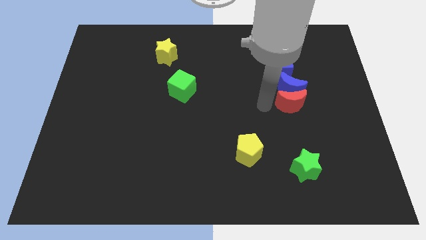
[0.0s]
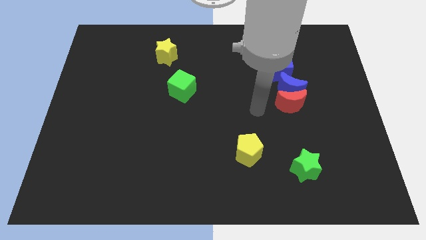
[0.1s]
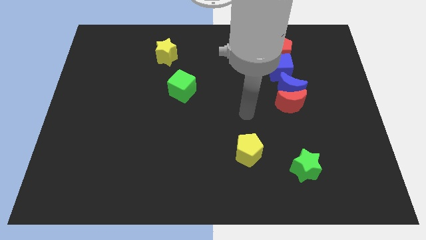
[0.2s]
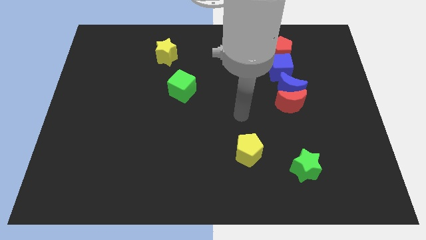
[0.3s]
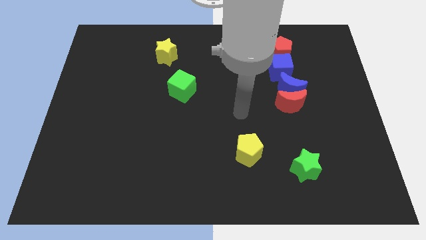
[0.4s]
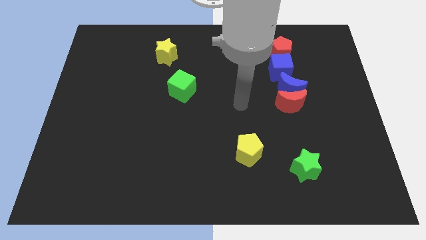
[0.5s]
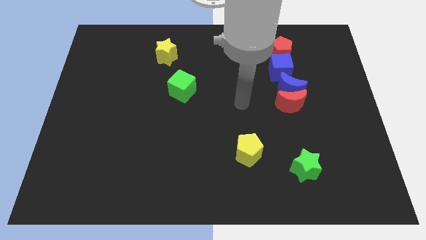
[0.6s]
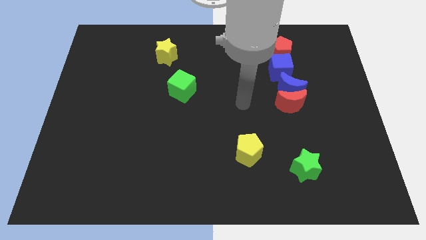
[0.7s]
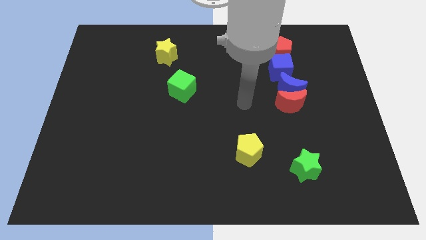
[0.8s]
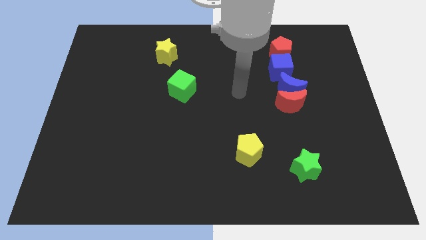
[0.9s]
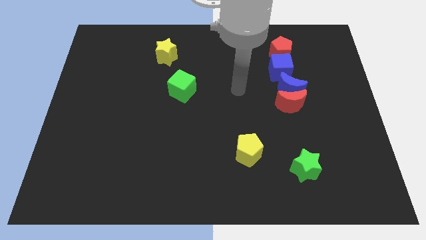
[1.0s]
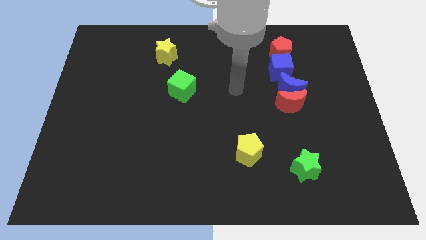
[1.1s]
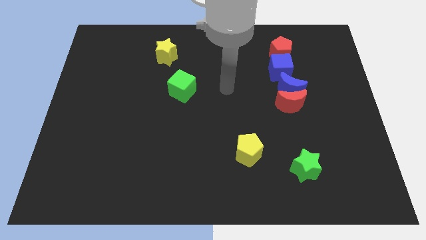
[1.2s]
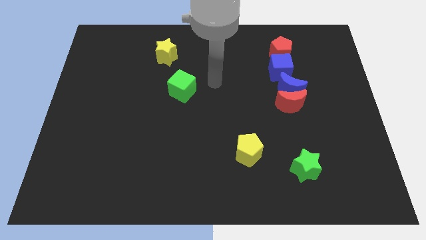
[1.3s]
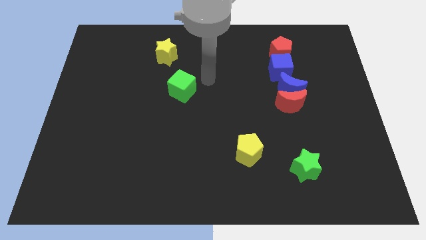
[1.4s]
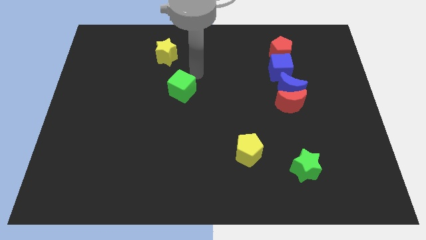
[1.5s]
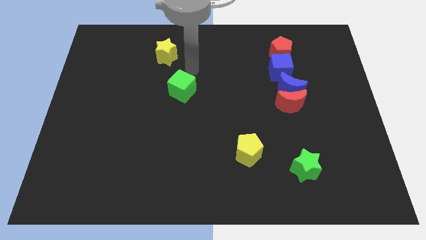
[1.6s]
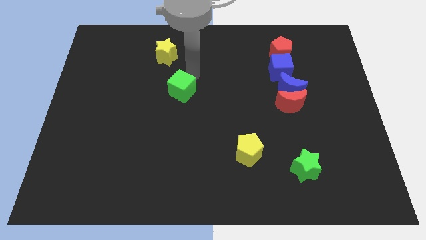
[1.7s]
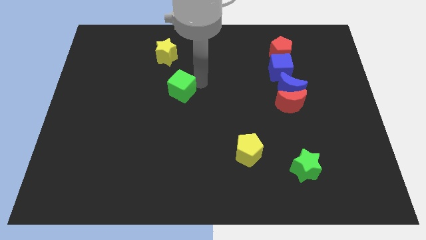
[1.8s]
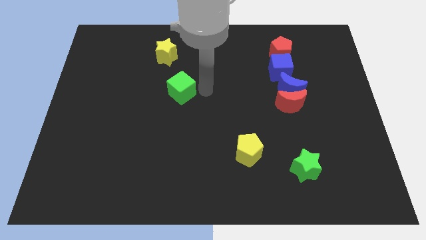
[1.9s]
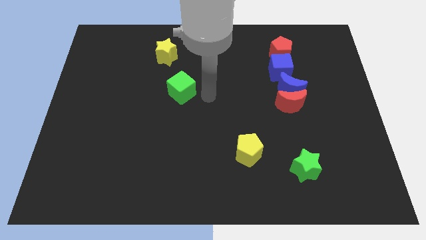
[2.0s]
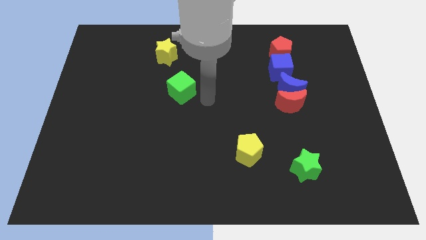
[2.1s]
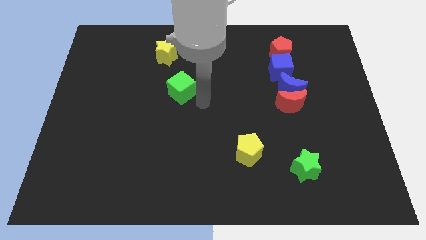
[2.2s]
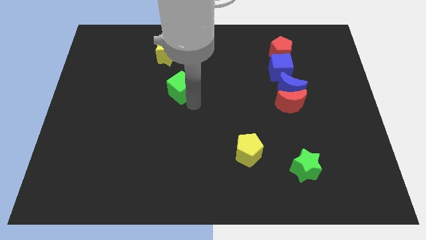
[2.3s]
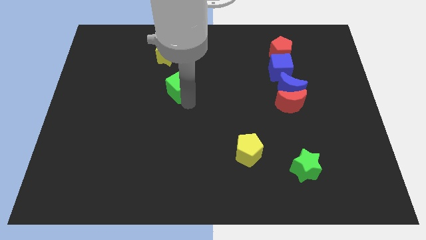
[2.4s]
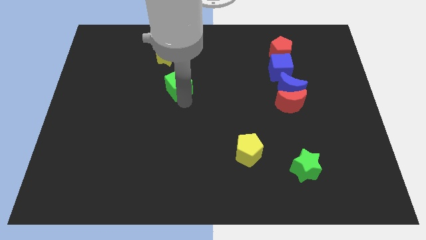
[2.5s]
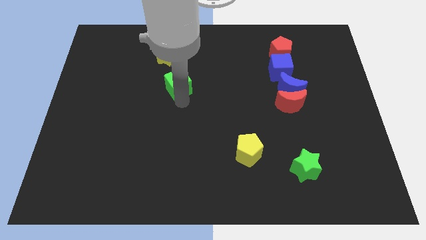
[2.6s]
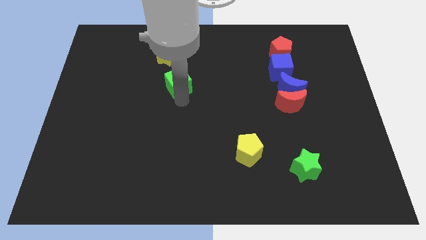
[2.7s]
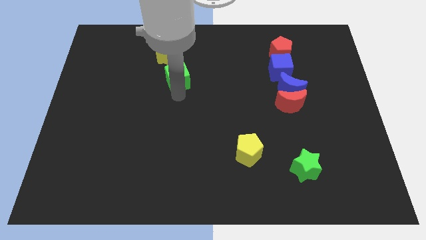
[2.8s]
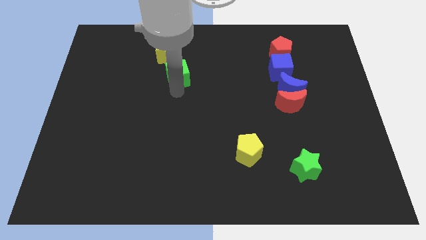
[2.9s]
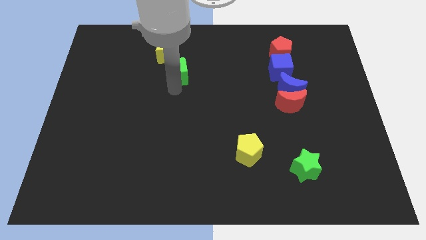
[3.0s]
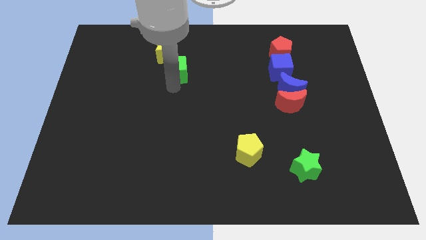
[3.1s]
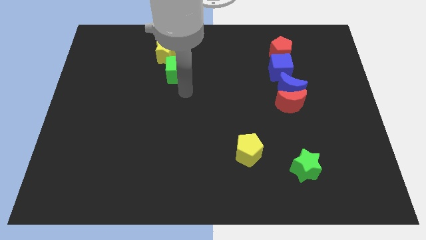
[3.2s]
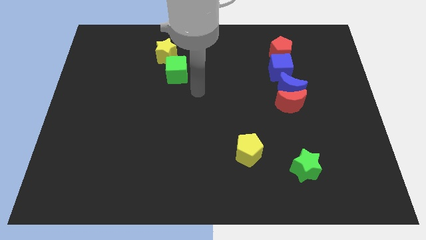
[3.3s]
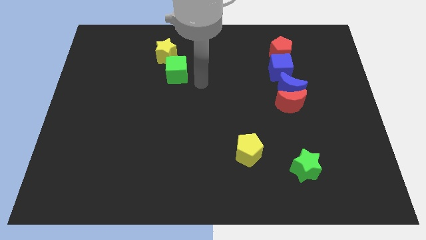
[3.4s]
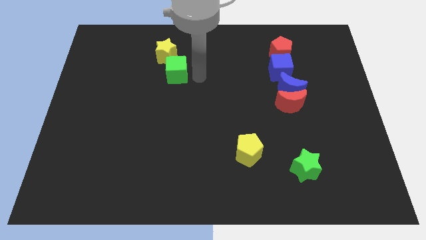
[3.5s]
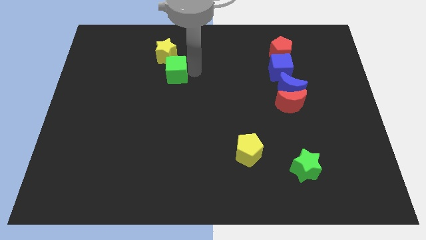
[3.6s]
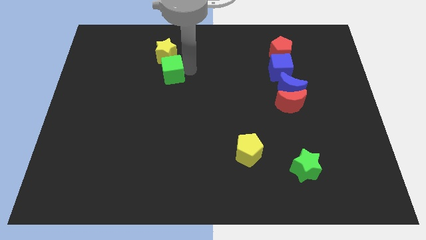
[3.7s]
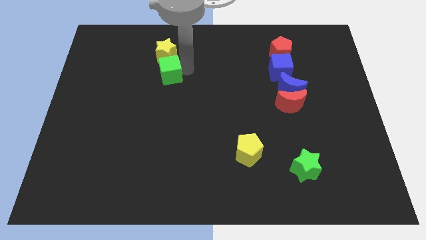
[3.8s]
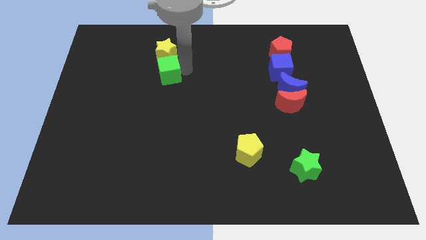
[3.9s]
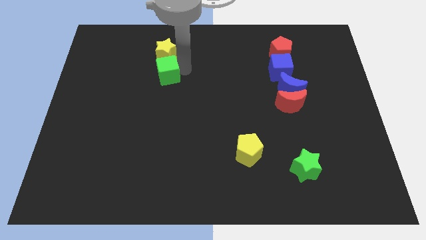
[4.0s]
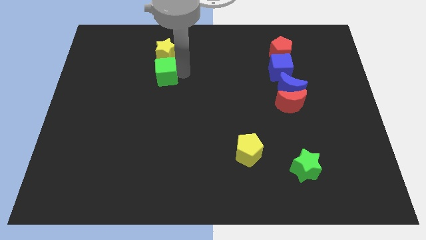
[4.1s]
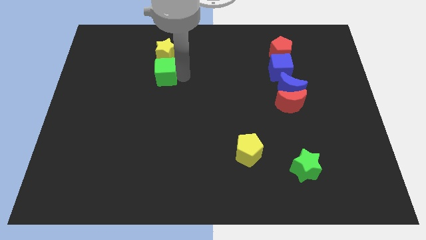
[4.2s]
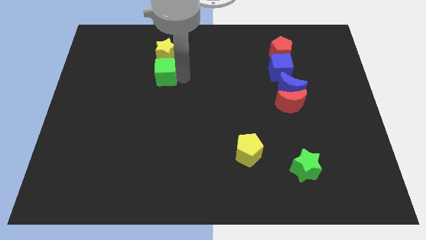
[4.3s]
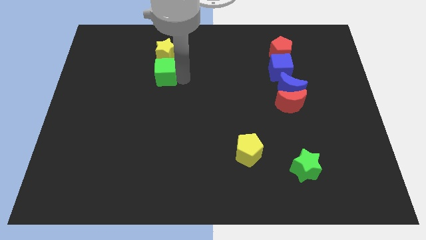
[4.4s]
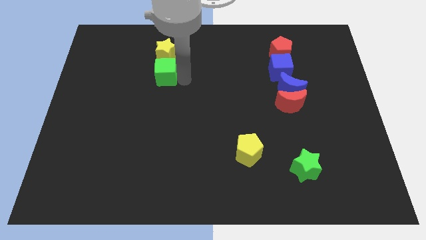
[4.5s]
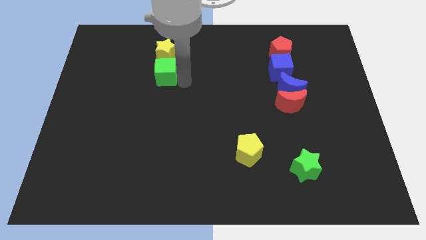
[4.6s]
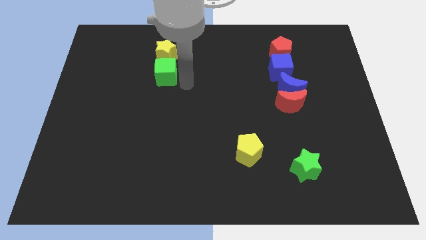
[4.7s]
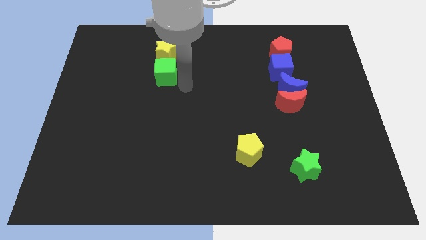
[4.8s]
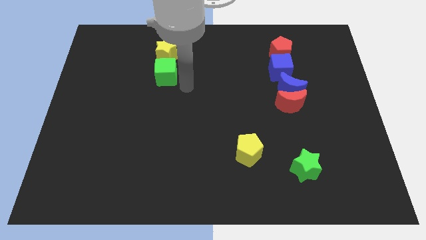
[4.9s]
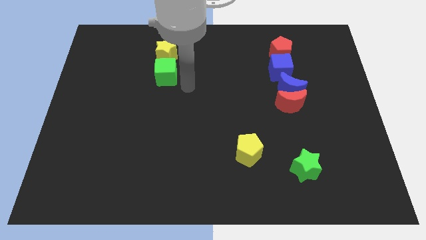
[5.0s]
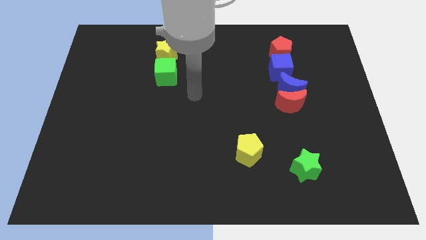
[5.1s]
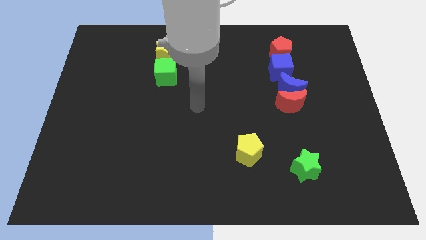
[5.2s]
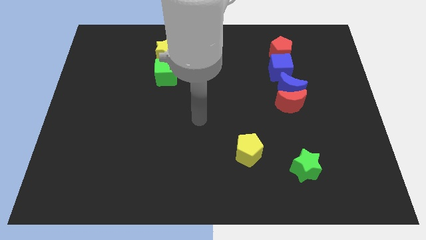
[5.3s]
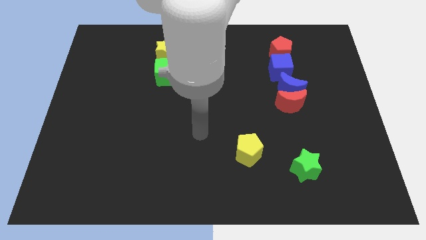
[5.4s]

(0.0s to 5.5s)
move the green cube parallel left to the blue cube

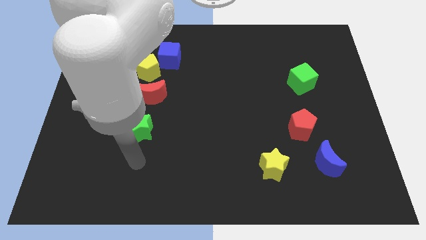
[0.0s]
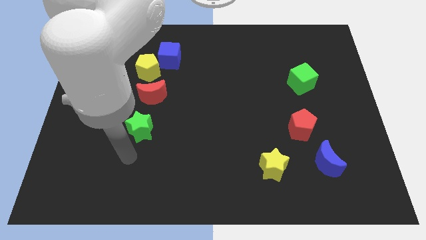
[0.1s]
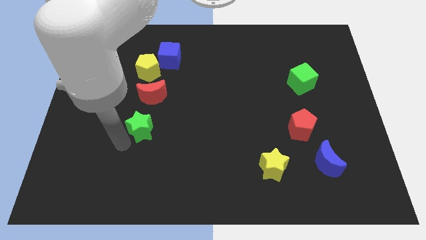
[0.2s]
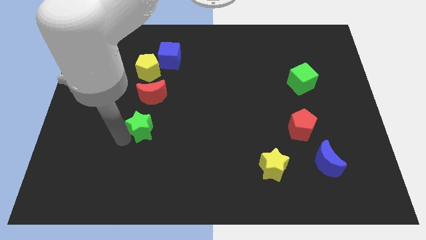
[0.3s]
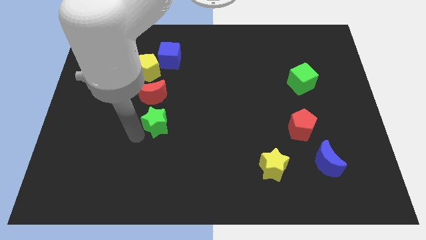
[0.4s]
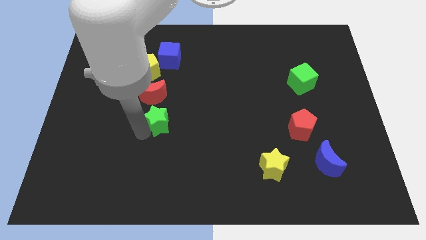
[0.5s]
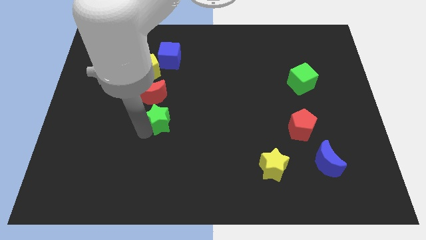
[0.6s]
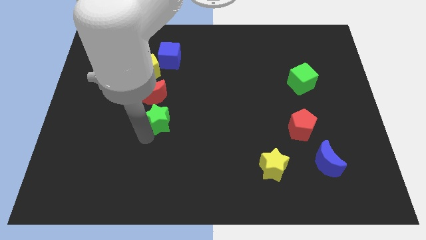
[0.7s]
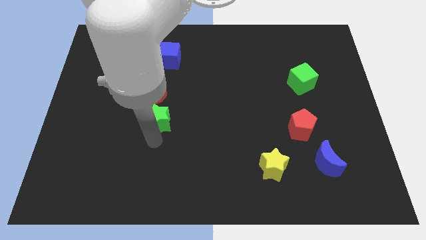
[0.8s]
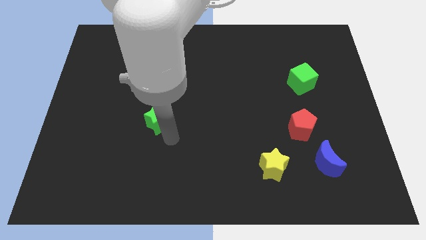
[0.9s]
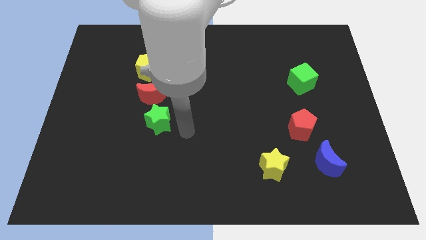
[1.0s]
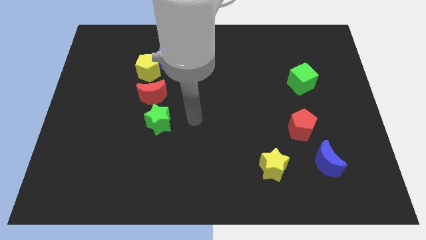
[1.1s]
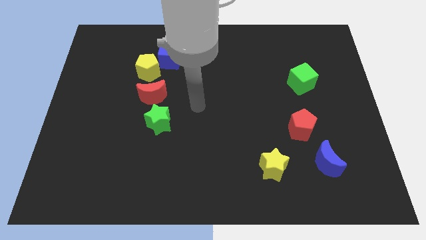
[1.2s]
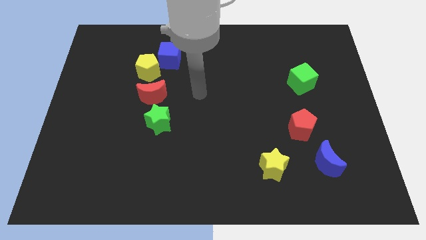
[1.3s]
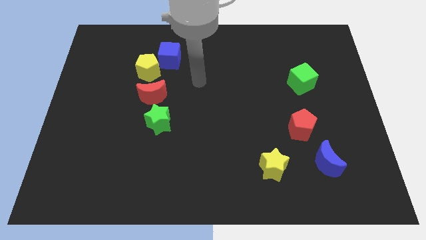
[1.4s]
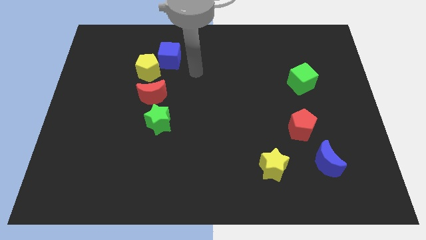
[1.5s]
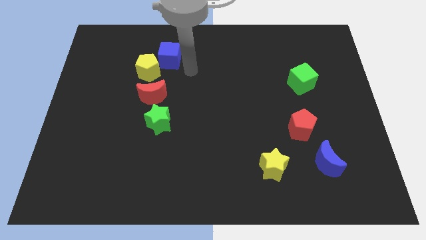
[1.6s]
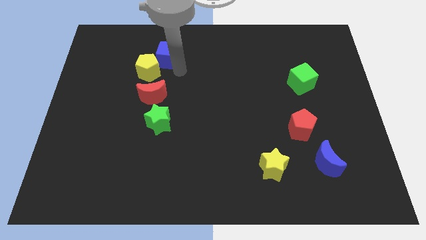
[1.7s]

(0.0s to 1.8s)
place your arm at the right side of the yellow pentagon

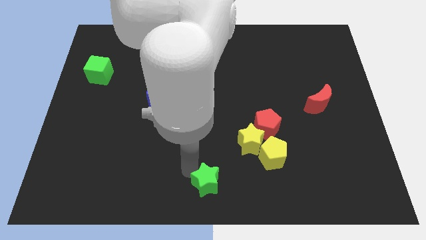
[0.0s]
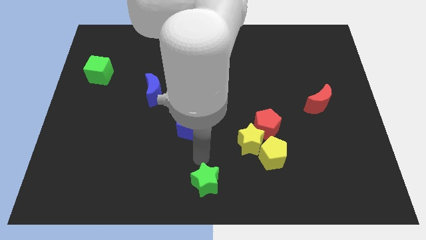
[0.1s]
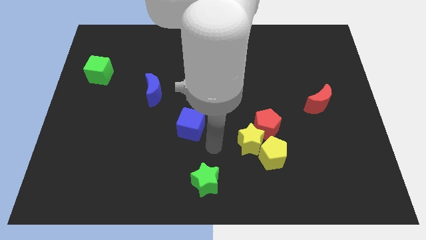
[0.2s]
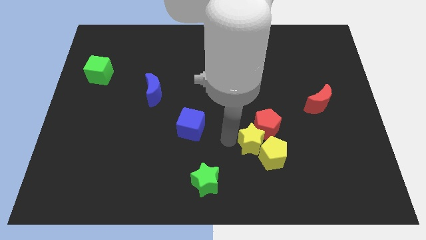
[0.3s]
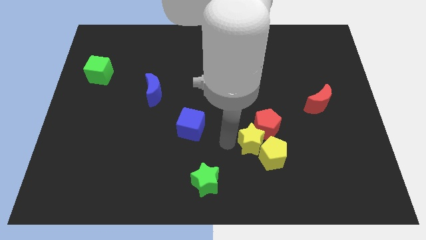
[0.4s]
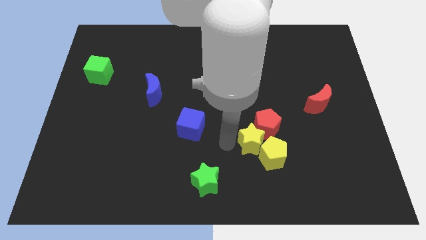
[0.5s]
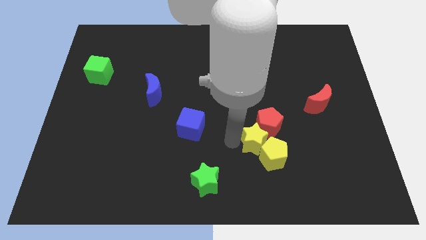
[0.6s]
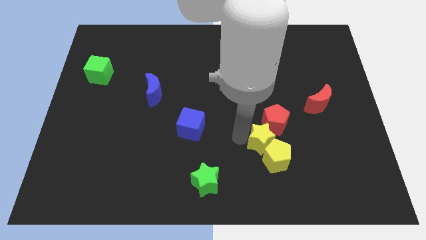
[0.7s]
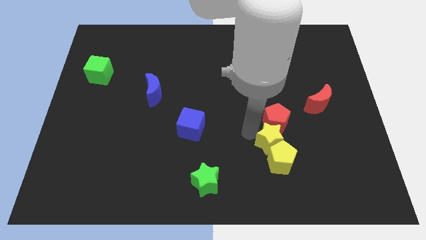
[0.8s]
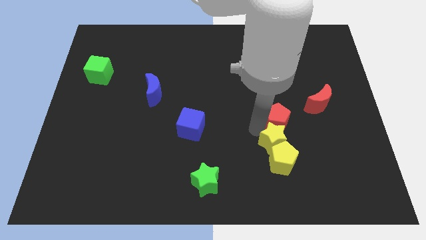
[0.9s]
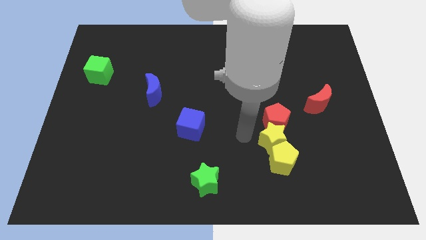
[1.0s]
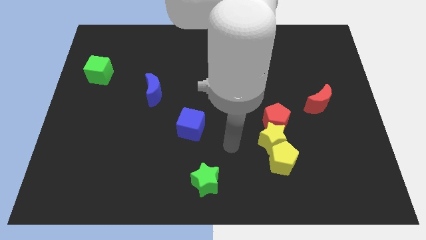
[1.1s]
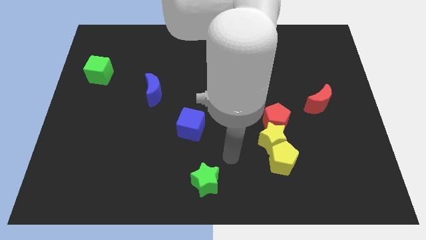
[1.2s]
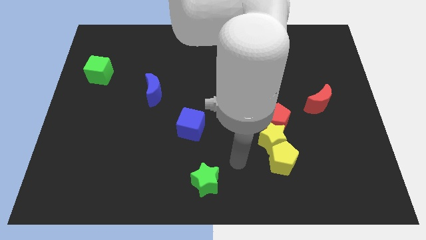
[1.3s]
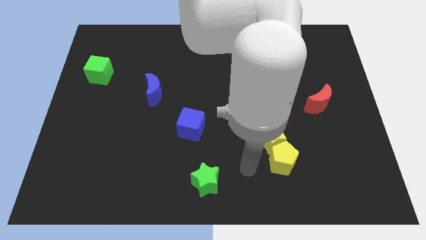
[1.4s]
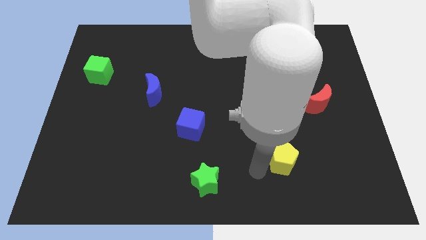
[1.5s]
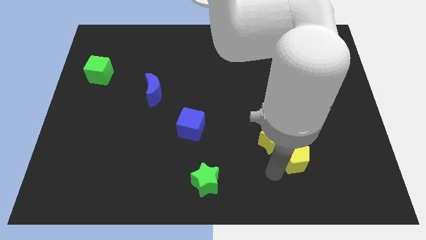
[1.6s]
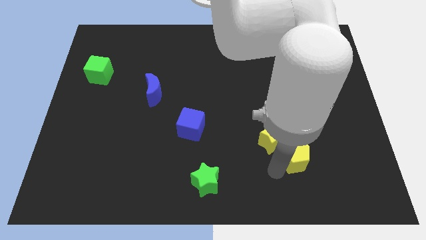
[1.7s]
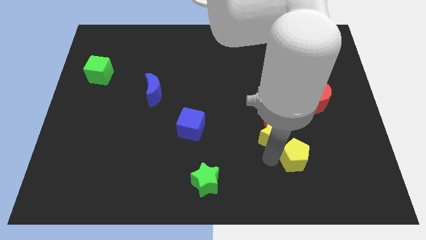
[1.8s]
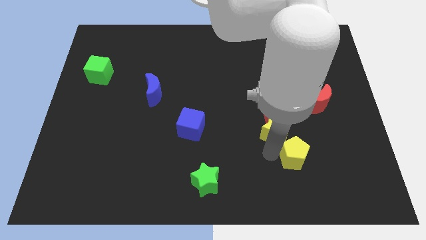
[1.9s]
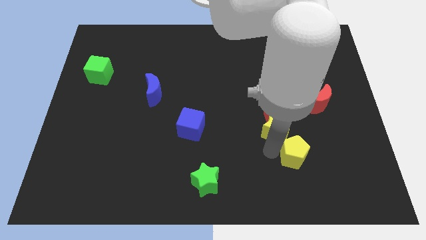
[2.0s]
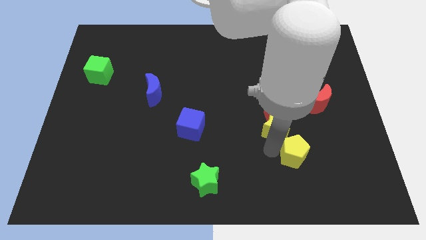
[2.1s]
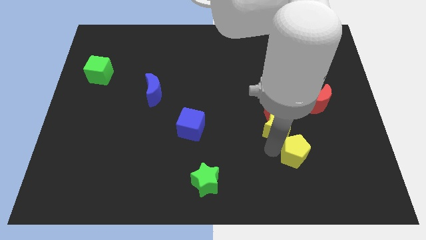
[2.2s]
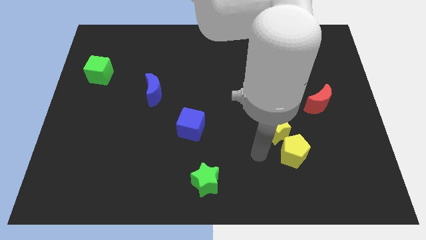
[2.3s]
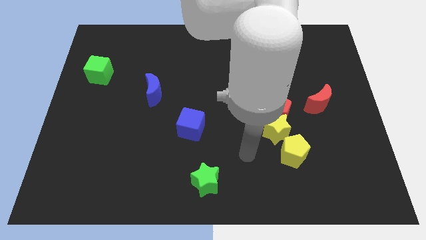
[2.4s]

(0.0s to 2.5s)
push the yellow blocks and red pentagon towards the right side of the board
